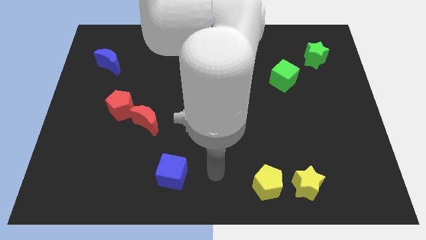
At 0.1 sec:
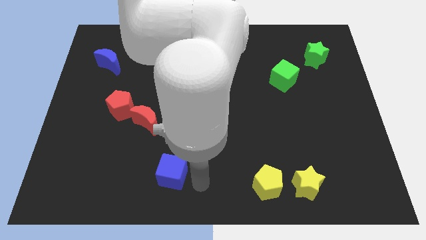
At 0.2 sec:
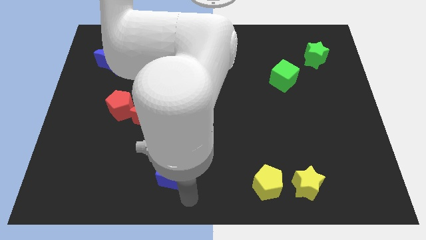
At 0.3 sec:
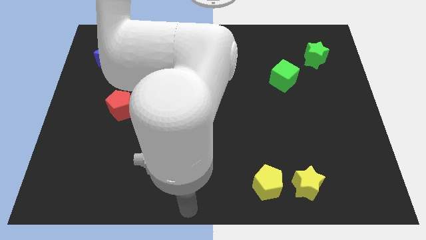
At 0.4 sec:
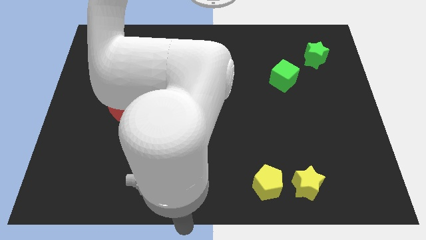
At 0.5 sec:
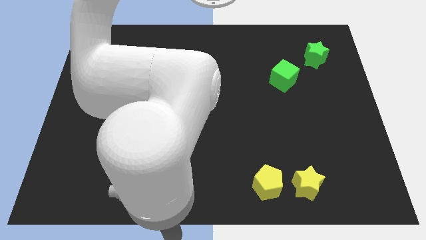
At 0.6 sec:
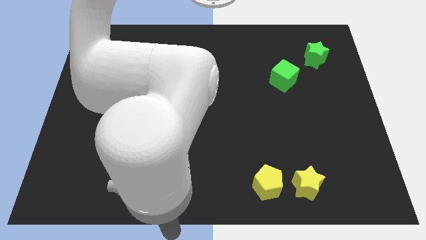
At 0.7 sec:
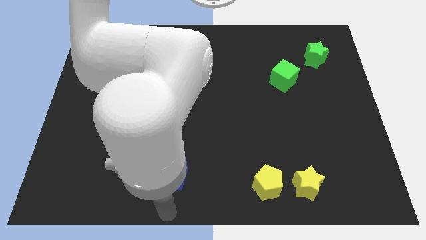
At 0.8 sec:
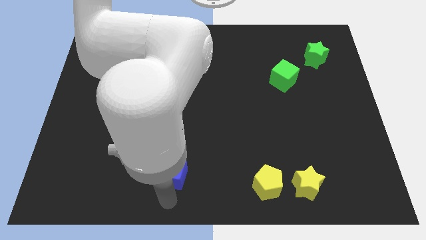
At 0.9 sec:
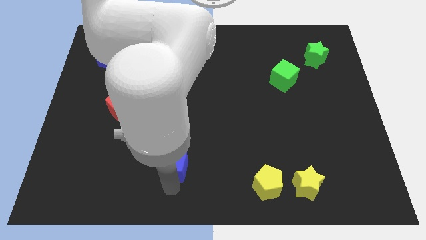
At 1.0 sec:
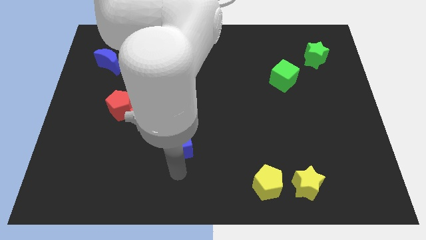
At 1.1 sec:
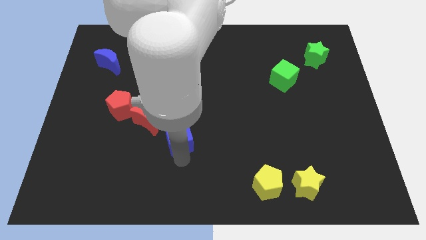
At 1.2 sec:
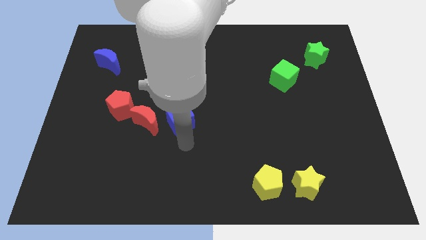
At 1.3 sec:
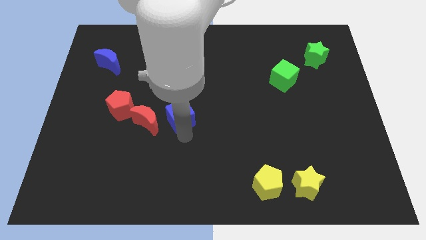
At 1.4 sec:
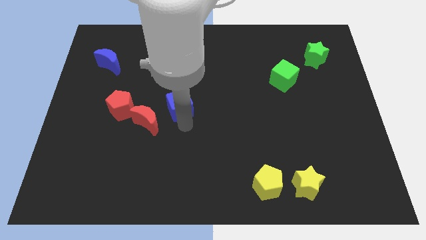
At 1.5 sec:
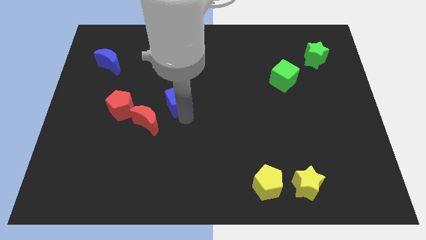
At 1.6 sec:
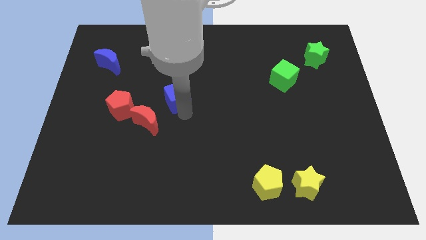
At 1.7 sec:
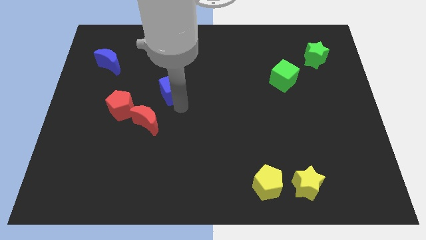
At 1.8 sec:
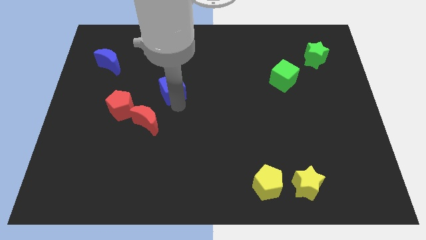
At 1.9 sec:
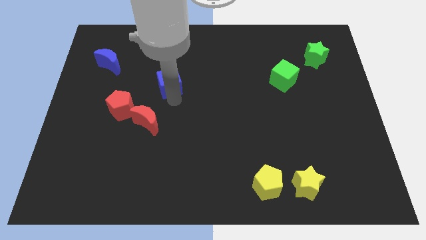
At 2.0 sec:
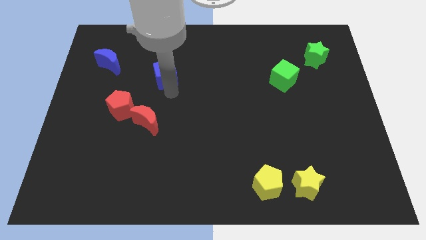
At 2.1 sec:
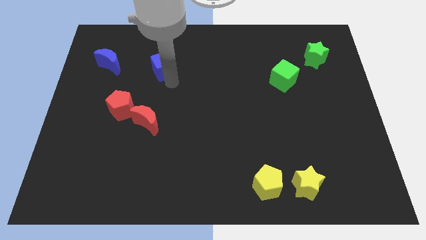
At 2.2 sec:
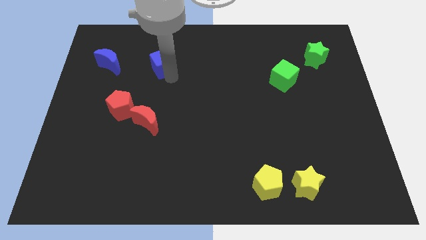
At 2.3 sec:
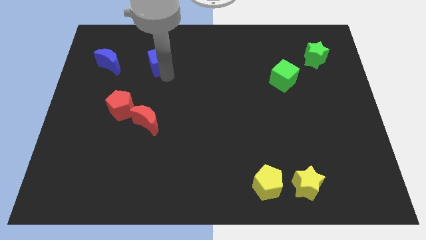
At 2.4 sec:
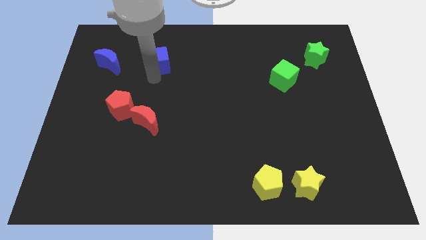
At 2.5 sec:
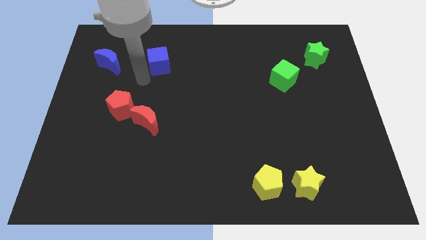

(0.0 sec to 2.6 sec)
move the blue cube towards the blue moon

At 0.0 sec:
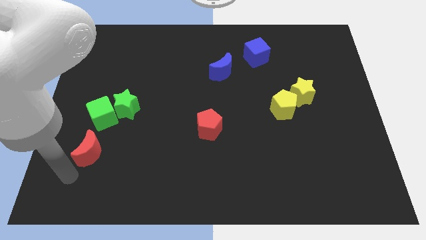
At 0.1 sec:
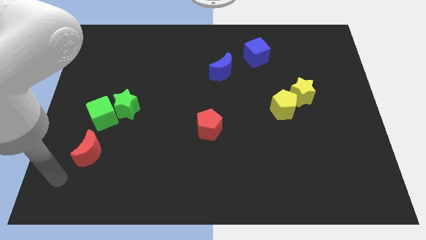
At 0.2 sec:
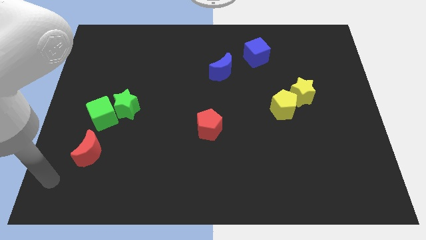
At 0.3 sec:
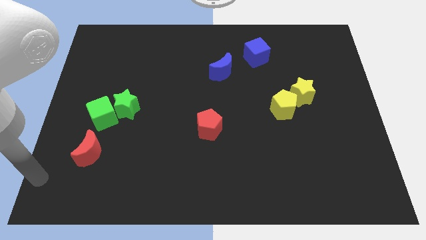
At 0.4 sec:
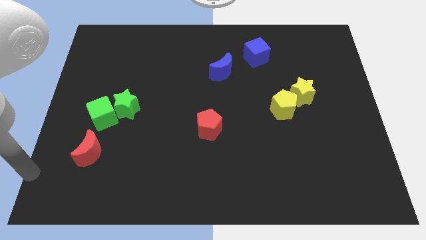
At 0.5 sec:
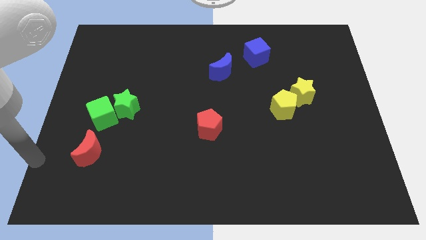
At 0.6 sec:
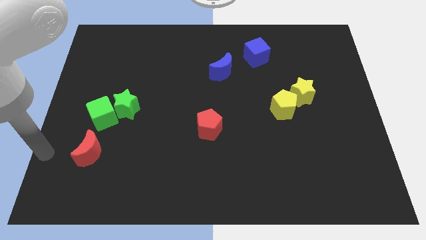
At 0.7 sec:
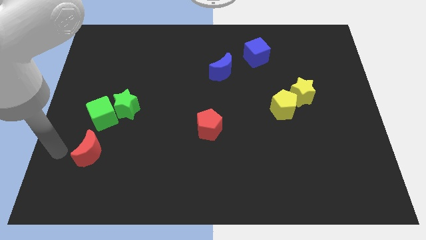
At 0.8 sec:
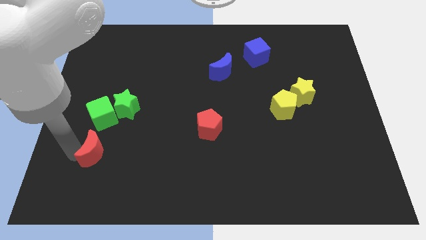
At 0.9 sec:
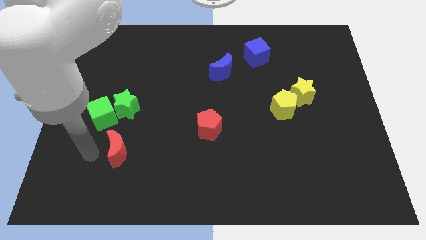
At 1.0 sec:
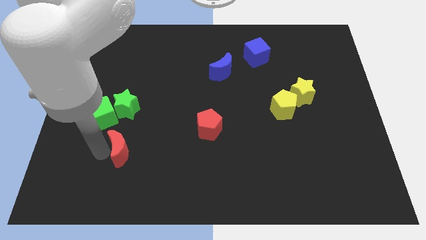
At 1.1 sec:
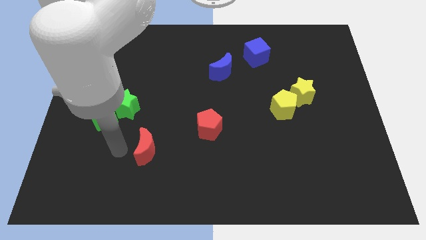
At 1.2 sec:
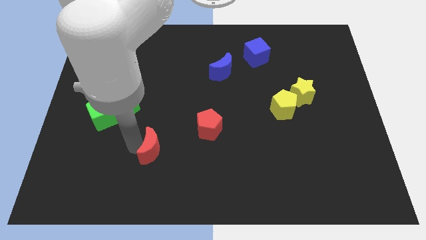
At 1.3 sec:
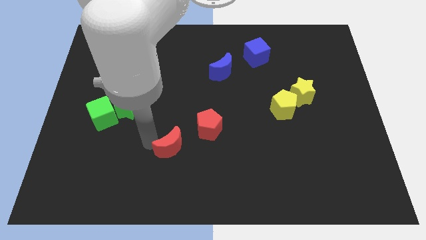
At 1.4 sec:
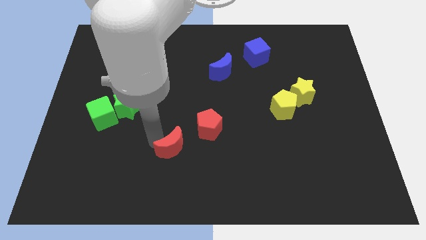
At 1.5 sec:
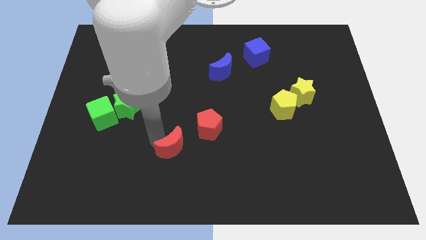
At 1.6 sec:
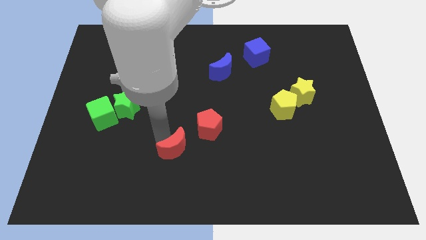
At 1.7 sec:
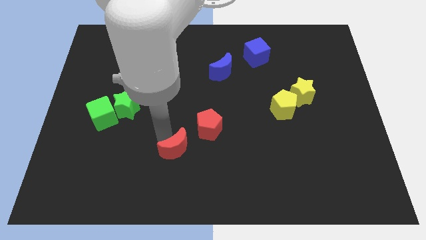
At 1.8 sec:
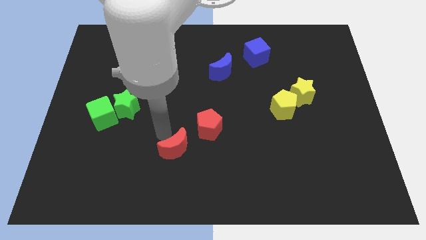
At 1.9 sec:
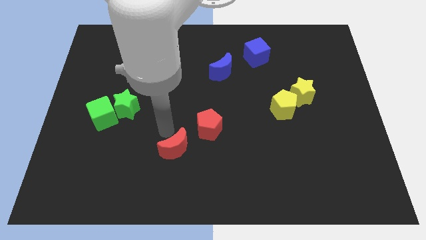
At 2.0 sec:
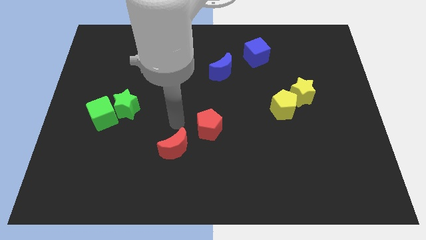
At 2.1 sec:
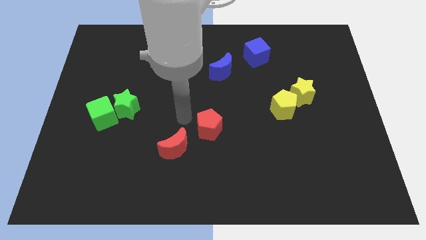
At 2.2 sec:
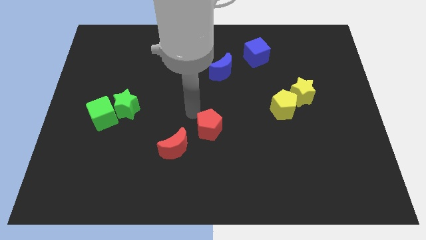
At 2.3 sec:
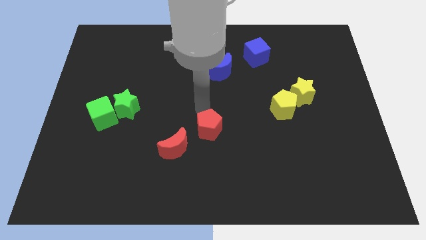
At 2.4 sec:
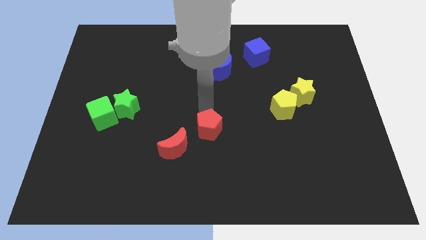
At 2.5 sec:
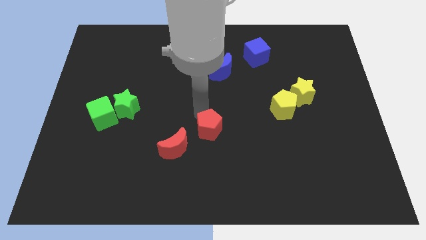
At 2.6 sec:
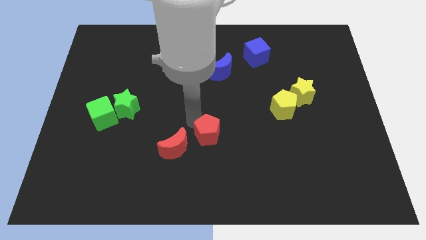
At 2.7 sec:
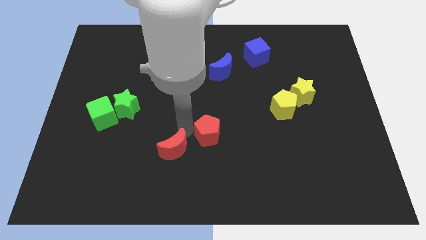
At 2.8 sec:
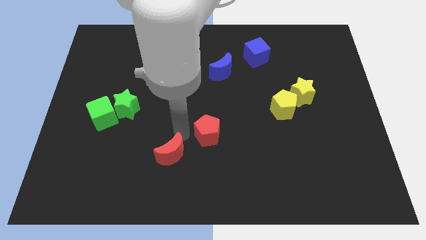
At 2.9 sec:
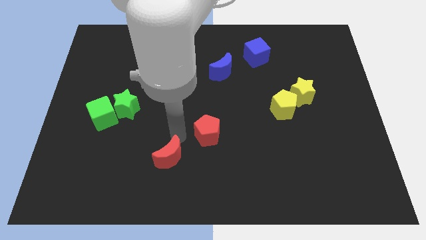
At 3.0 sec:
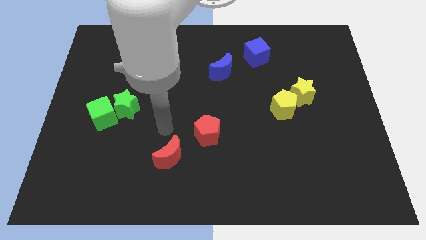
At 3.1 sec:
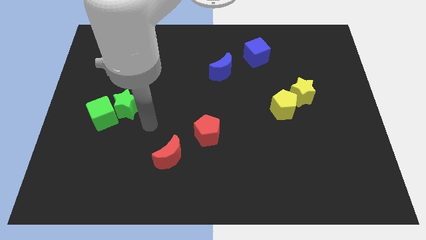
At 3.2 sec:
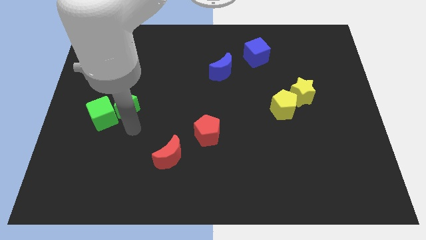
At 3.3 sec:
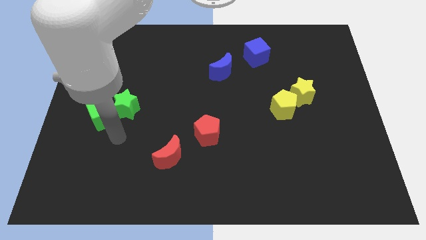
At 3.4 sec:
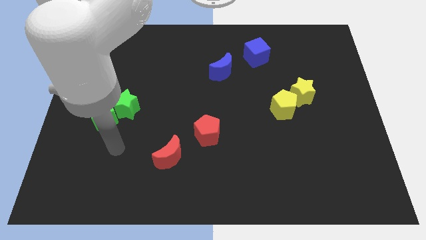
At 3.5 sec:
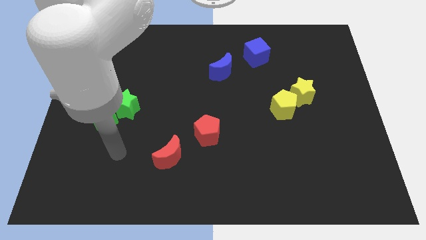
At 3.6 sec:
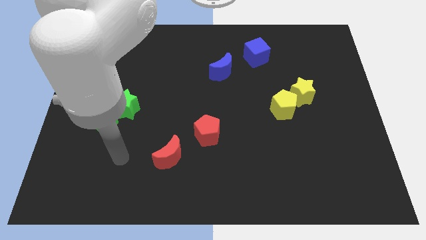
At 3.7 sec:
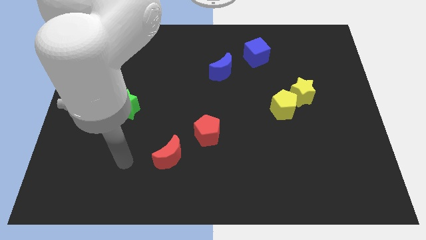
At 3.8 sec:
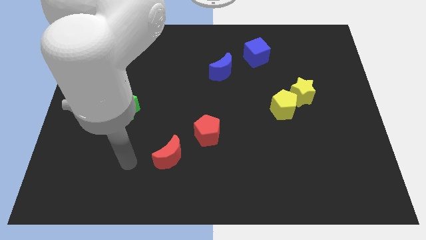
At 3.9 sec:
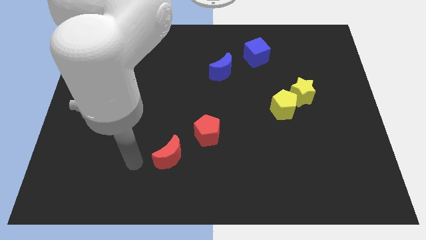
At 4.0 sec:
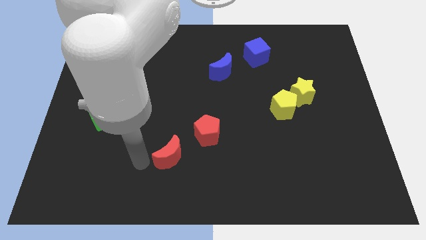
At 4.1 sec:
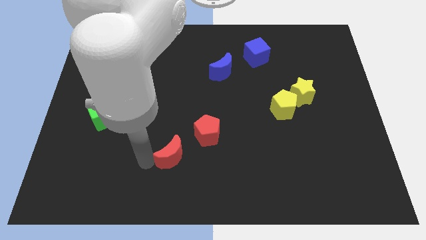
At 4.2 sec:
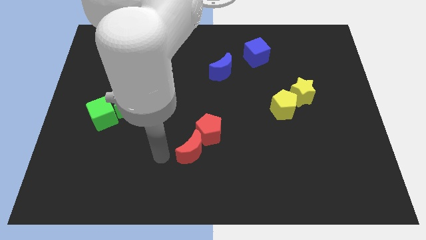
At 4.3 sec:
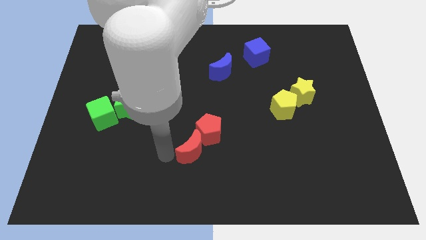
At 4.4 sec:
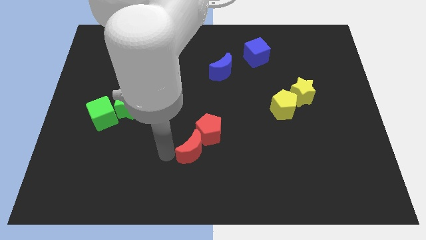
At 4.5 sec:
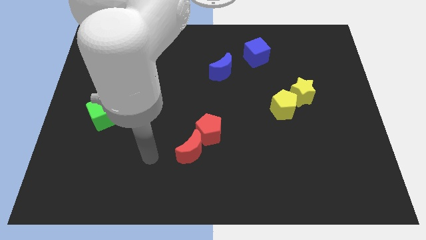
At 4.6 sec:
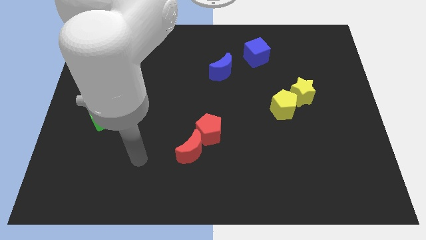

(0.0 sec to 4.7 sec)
push the red crescent into red pentagon

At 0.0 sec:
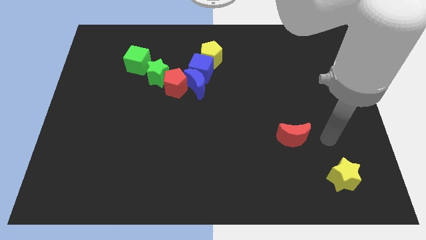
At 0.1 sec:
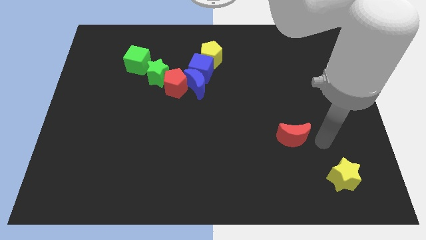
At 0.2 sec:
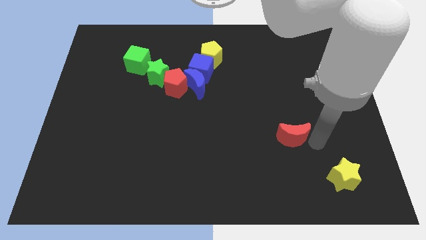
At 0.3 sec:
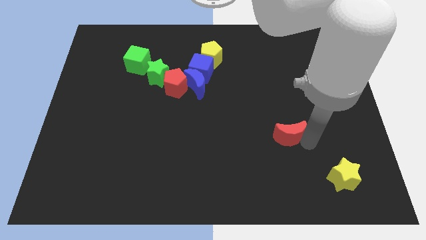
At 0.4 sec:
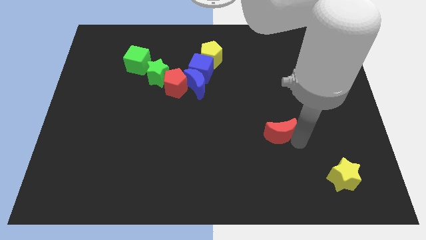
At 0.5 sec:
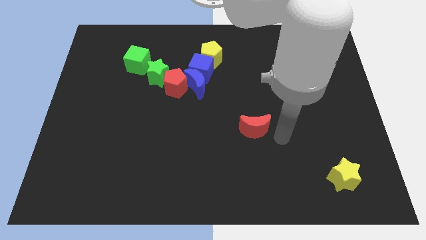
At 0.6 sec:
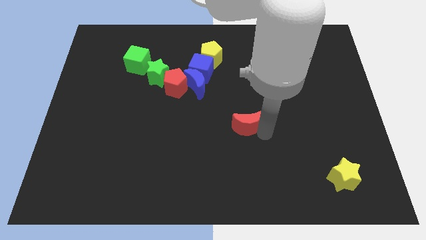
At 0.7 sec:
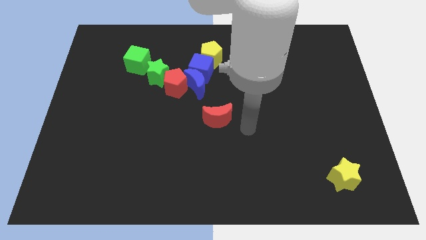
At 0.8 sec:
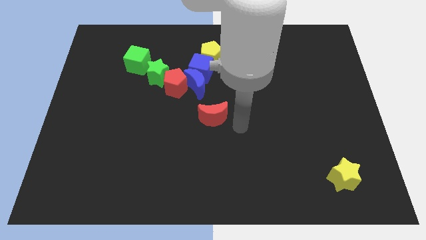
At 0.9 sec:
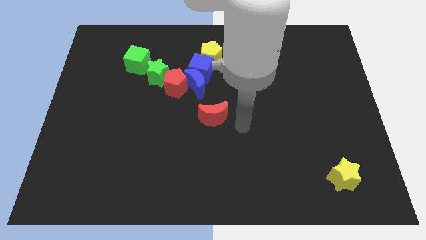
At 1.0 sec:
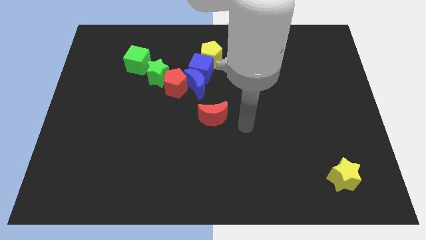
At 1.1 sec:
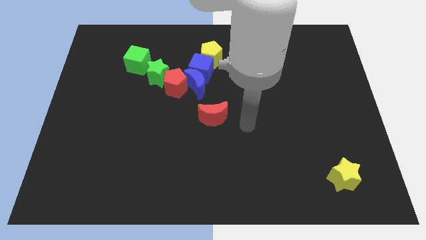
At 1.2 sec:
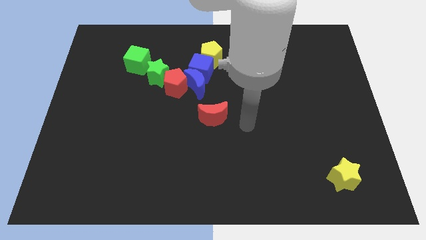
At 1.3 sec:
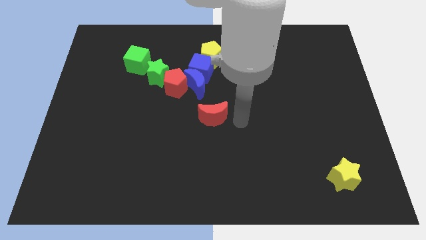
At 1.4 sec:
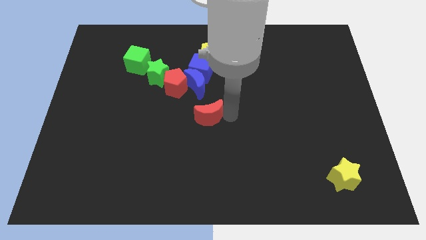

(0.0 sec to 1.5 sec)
move the red crescent at the center of the board

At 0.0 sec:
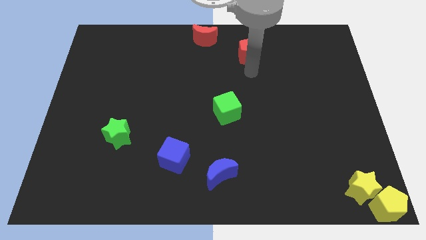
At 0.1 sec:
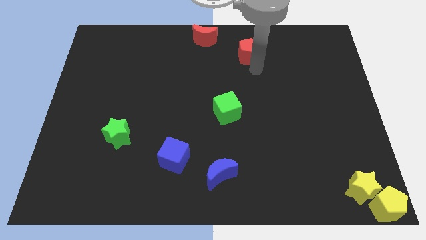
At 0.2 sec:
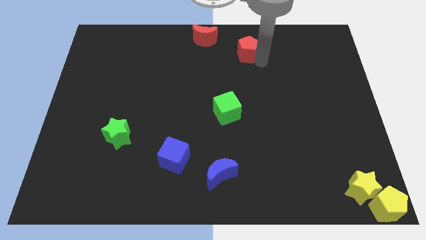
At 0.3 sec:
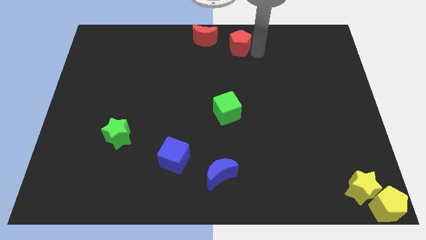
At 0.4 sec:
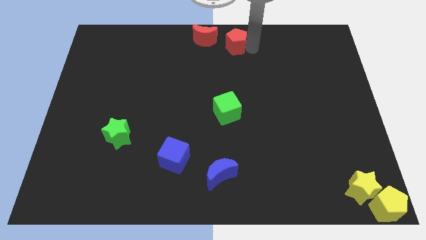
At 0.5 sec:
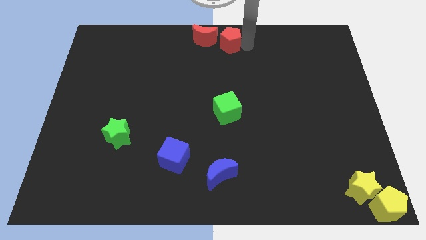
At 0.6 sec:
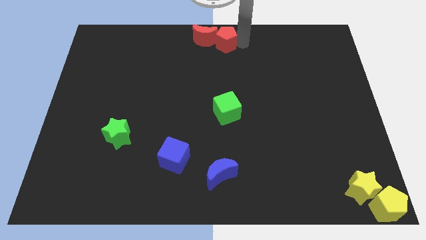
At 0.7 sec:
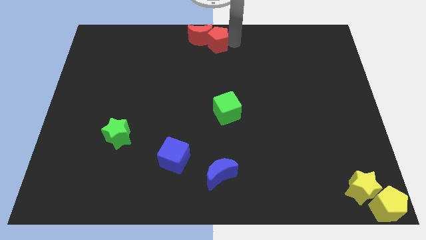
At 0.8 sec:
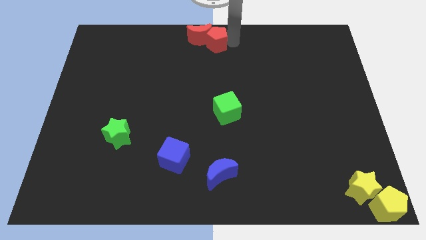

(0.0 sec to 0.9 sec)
put the red pentagon at the bottom right side of red moon
